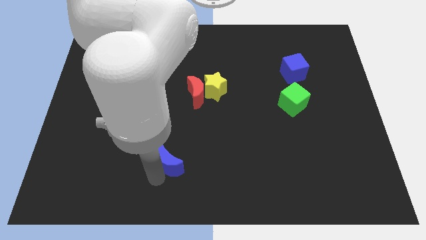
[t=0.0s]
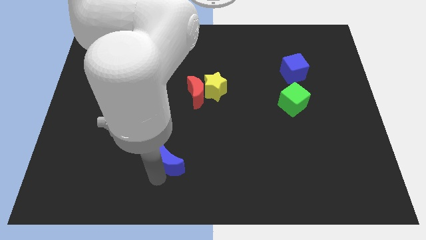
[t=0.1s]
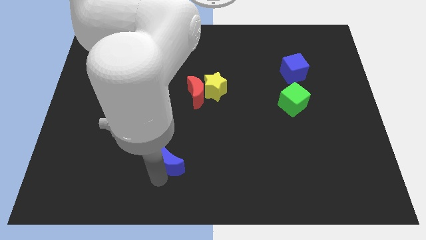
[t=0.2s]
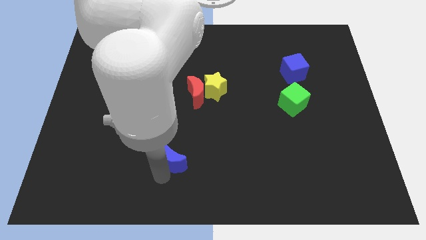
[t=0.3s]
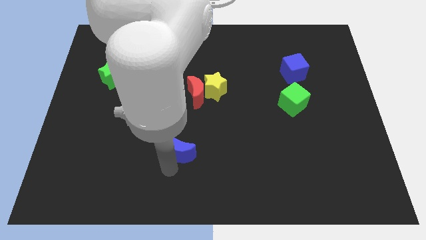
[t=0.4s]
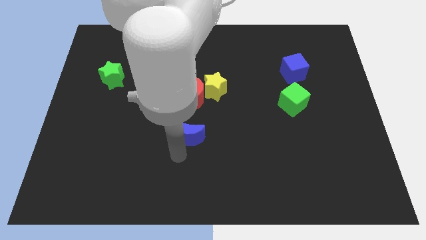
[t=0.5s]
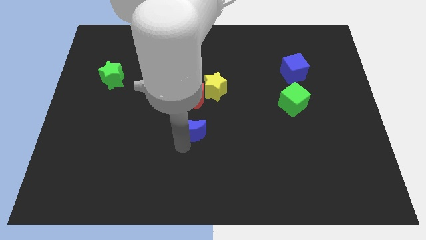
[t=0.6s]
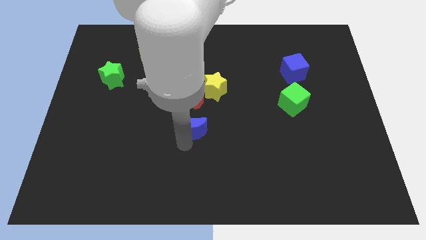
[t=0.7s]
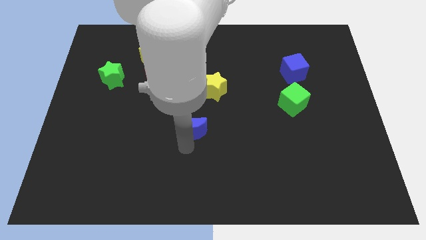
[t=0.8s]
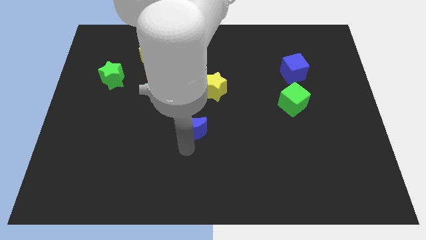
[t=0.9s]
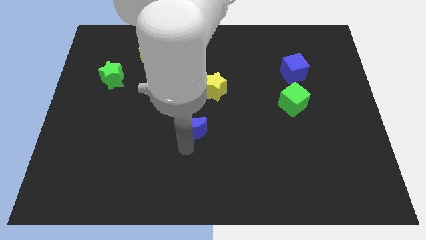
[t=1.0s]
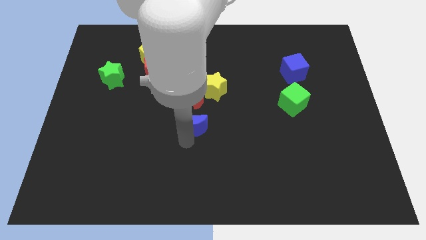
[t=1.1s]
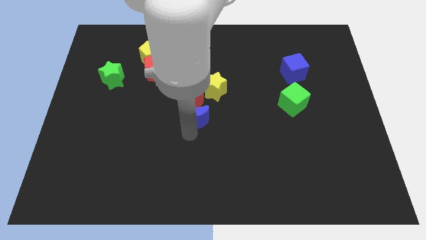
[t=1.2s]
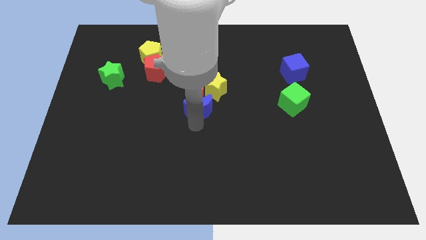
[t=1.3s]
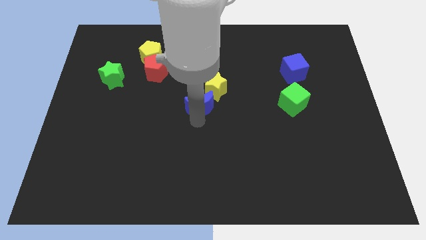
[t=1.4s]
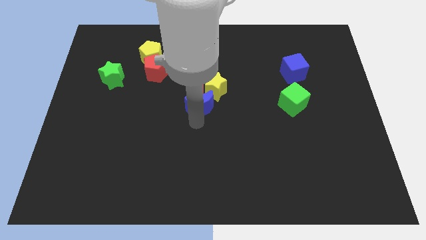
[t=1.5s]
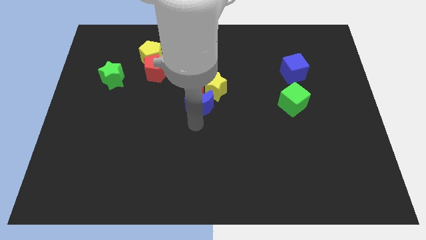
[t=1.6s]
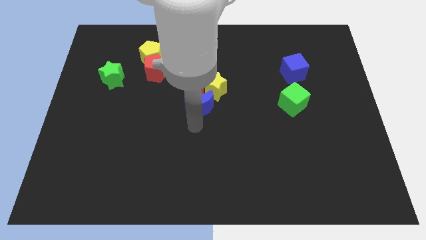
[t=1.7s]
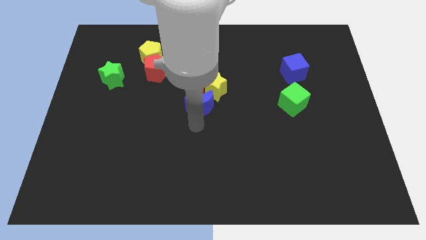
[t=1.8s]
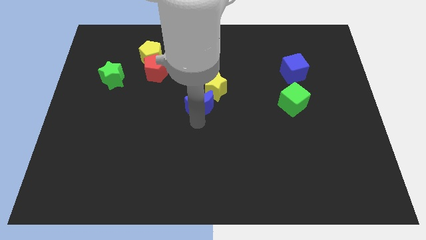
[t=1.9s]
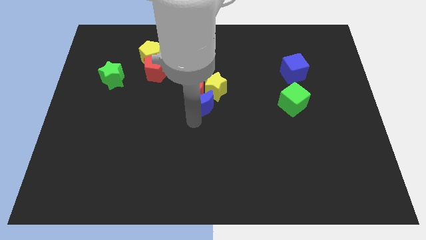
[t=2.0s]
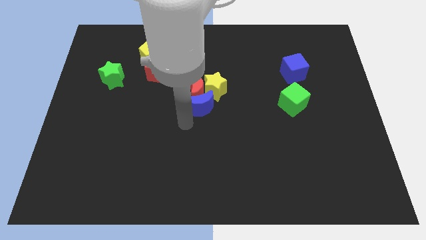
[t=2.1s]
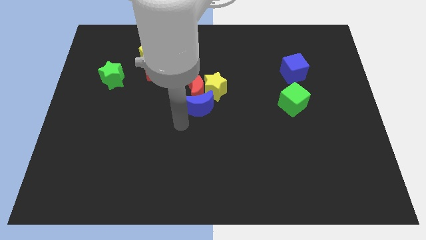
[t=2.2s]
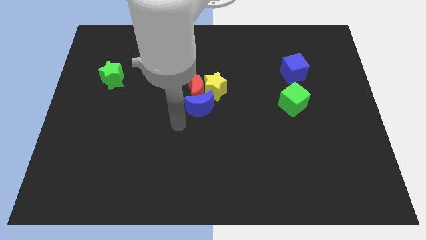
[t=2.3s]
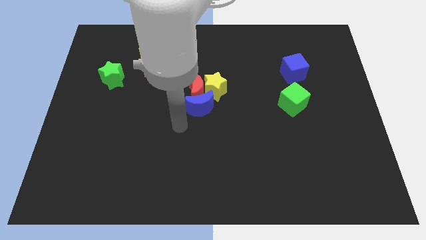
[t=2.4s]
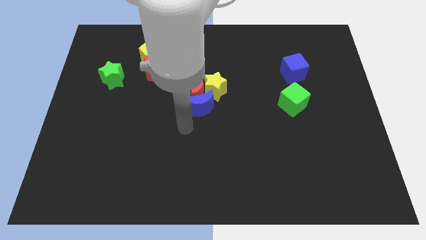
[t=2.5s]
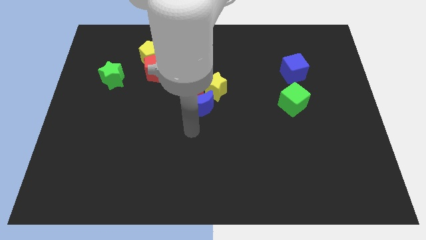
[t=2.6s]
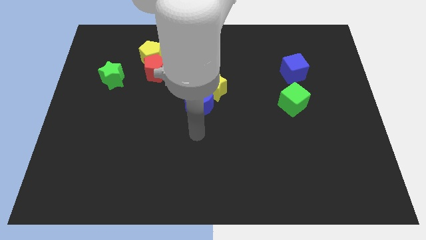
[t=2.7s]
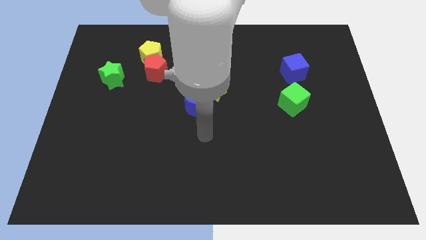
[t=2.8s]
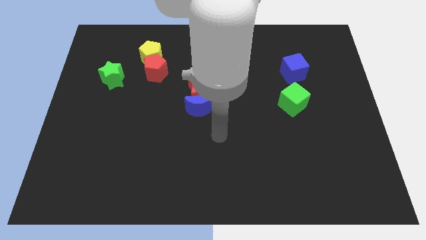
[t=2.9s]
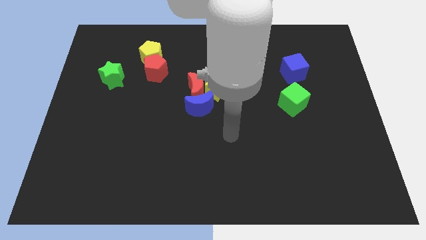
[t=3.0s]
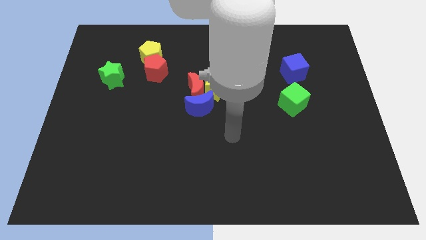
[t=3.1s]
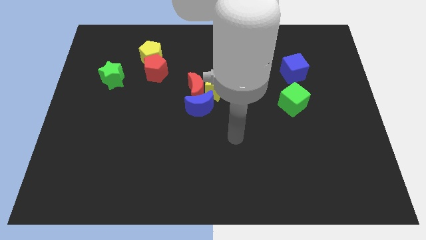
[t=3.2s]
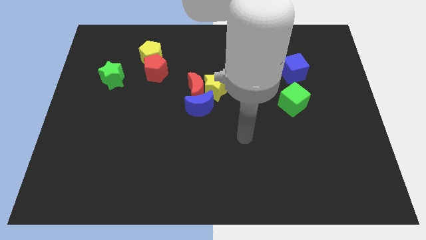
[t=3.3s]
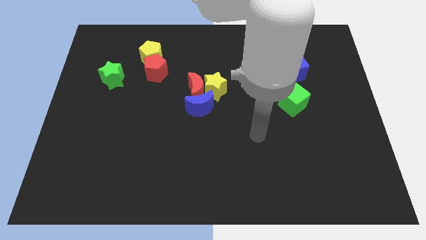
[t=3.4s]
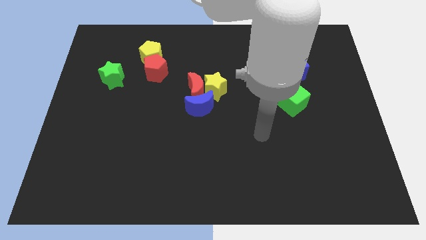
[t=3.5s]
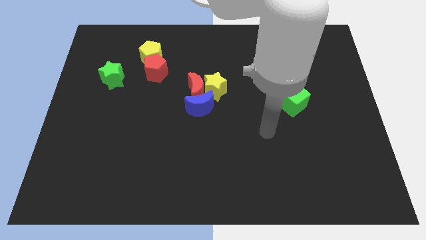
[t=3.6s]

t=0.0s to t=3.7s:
move blue moon near red moon and yellow star

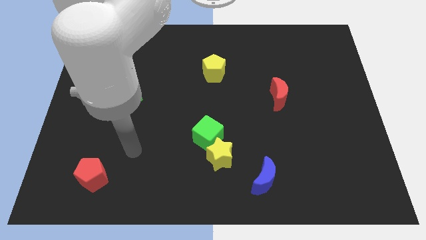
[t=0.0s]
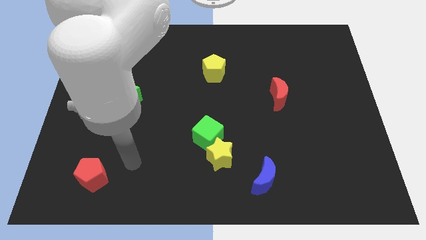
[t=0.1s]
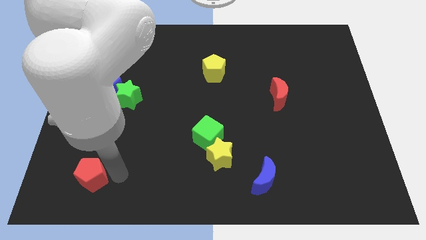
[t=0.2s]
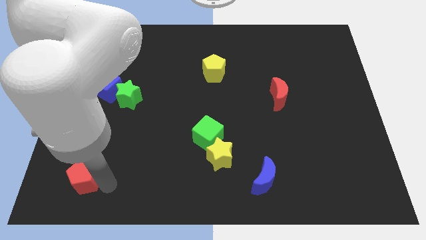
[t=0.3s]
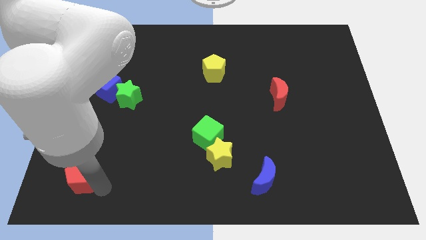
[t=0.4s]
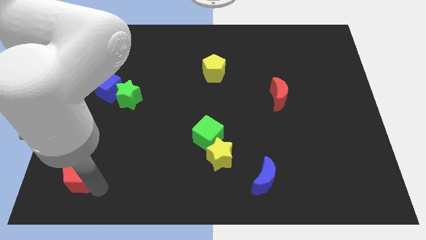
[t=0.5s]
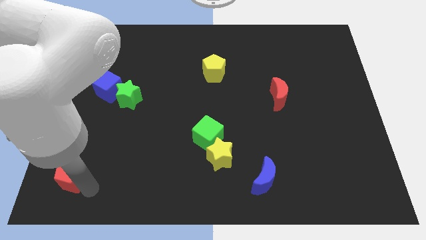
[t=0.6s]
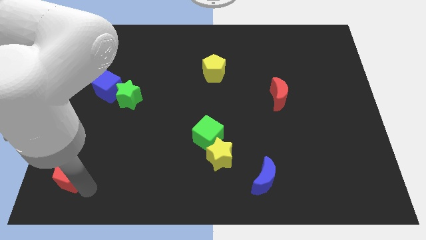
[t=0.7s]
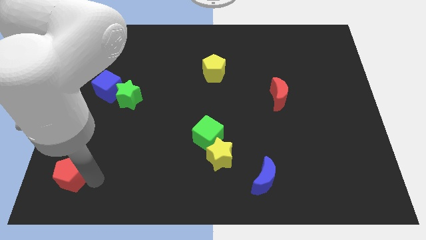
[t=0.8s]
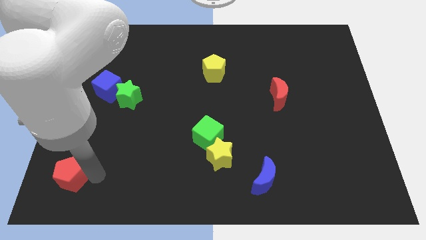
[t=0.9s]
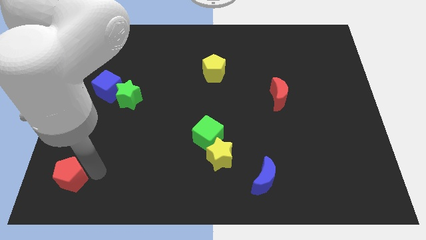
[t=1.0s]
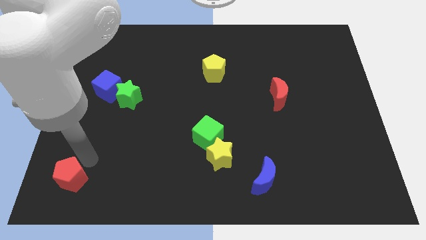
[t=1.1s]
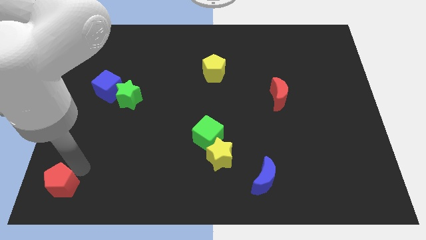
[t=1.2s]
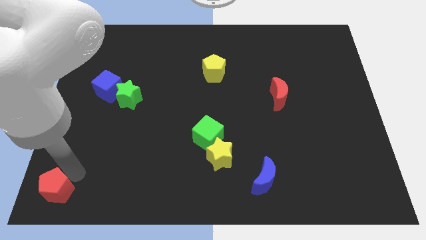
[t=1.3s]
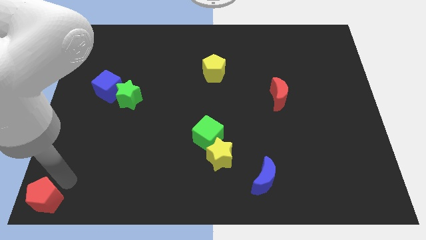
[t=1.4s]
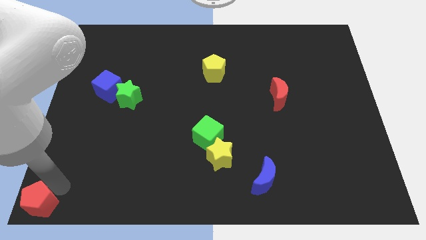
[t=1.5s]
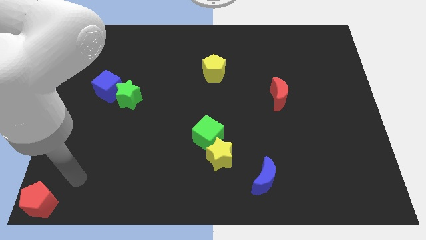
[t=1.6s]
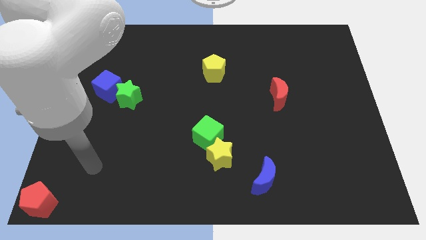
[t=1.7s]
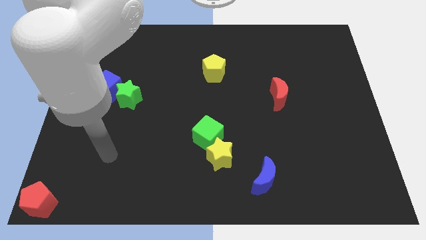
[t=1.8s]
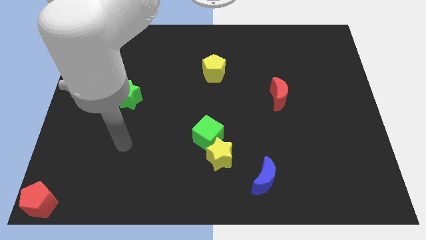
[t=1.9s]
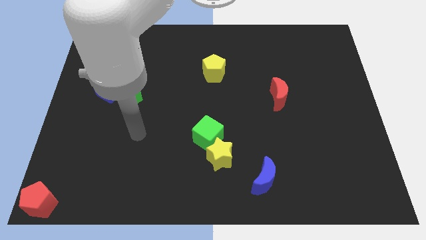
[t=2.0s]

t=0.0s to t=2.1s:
place the red pentagon at the bottom left

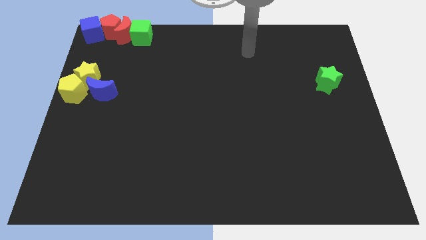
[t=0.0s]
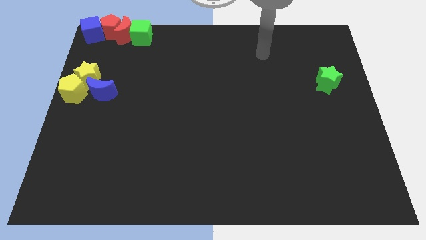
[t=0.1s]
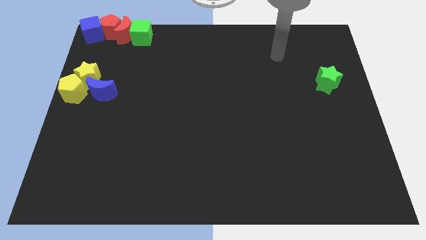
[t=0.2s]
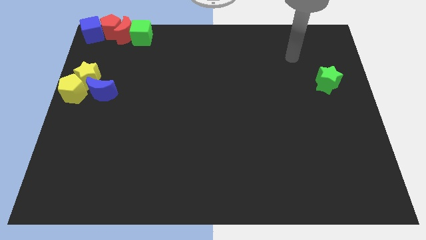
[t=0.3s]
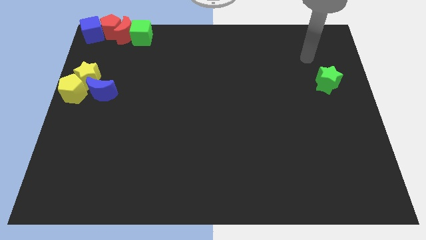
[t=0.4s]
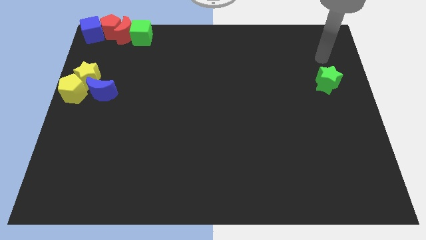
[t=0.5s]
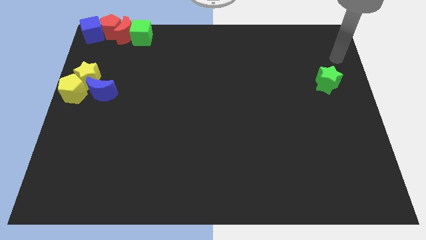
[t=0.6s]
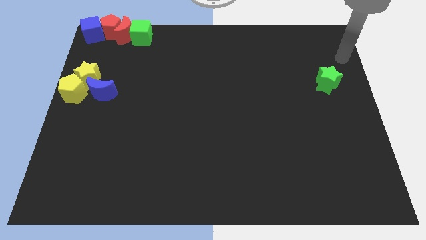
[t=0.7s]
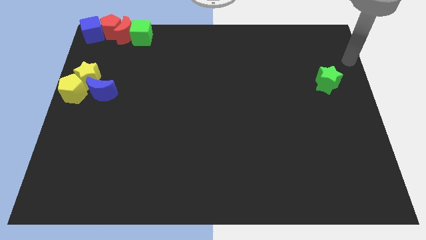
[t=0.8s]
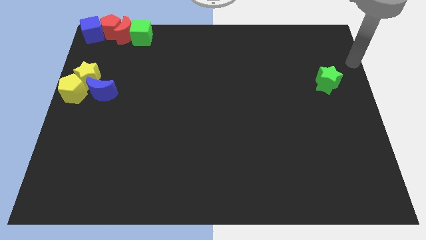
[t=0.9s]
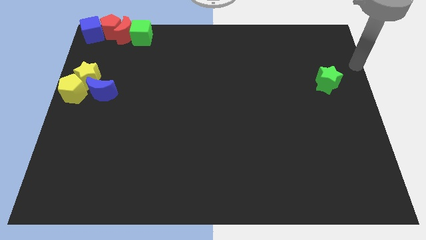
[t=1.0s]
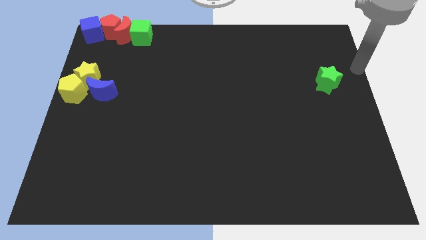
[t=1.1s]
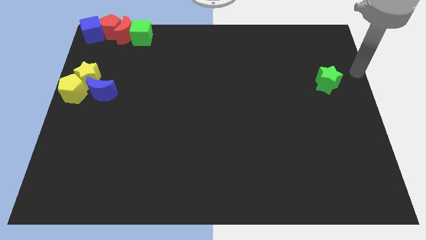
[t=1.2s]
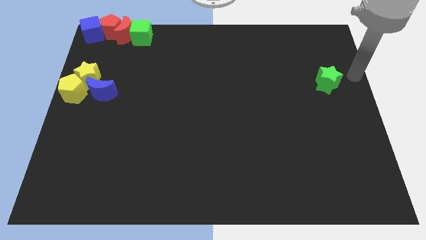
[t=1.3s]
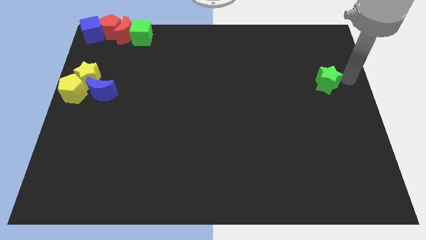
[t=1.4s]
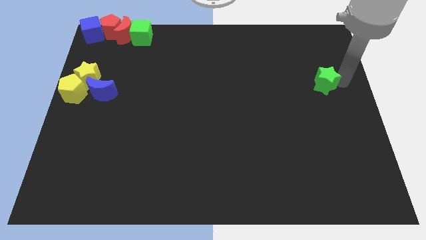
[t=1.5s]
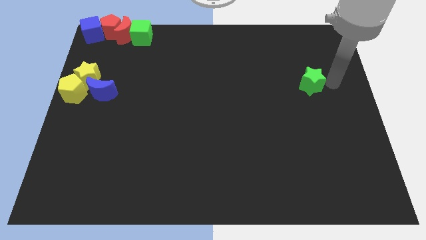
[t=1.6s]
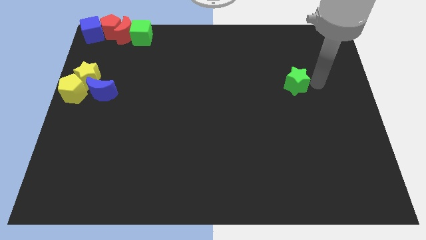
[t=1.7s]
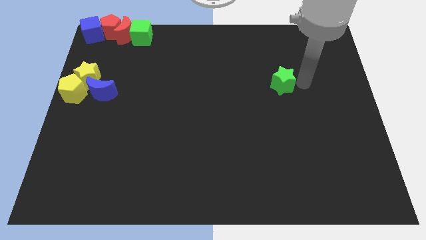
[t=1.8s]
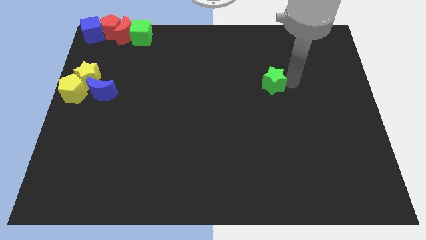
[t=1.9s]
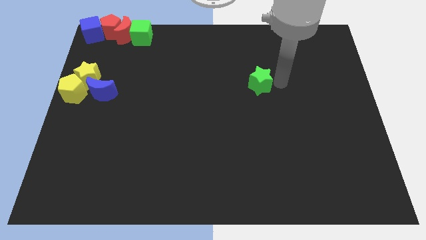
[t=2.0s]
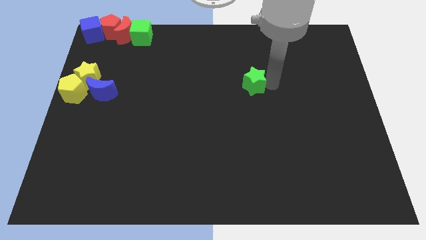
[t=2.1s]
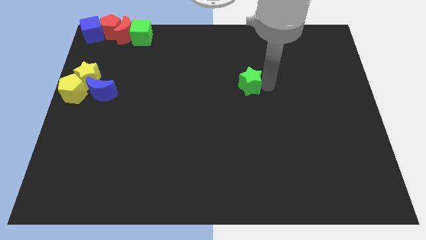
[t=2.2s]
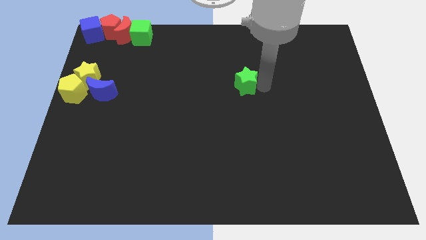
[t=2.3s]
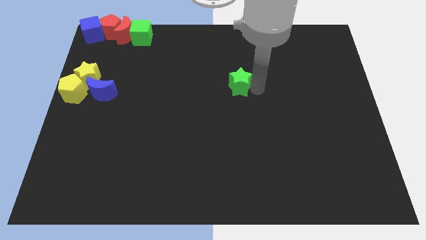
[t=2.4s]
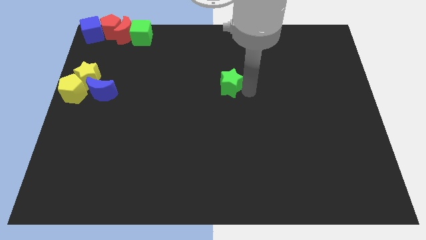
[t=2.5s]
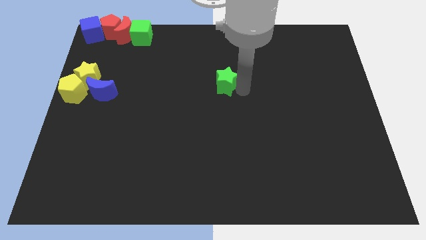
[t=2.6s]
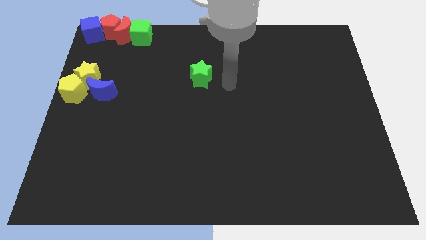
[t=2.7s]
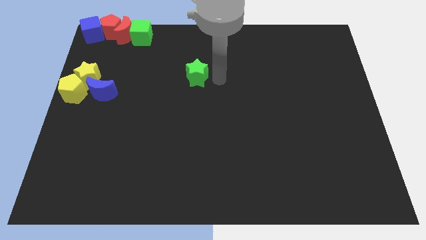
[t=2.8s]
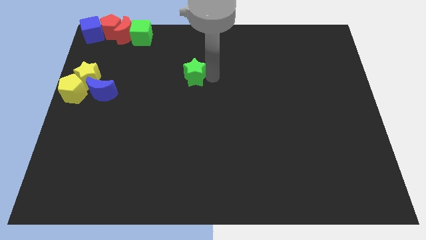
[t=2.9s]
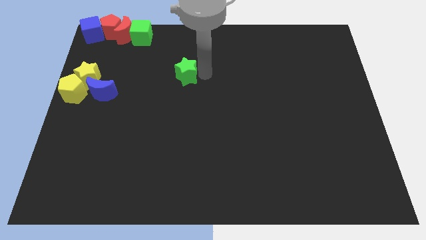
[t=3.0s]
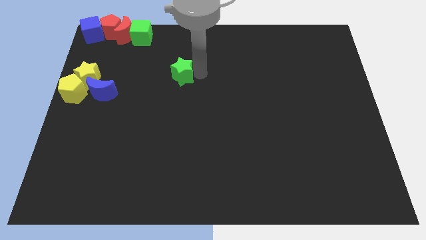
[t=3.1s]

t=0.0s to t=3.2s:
move the green star towards the top left of the board
